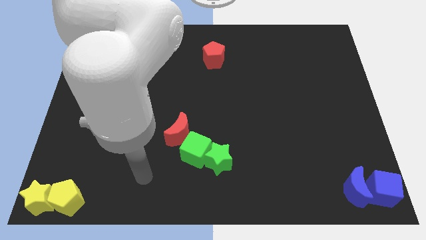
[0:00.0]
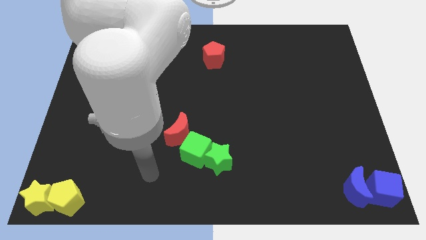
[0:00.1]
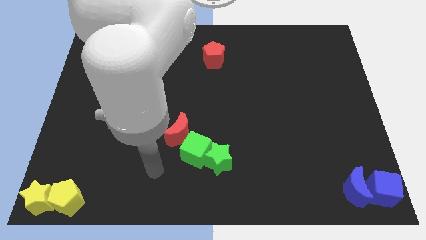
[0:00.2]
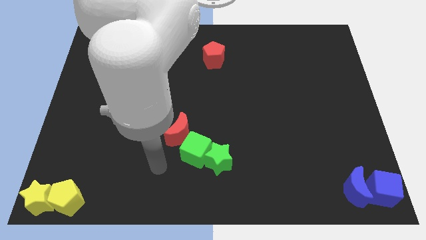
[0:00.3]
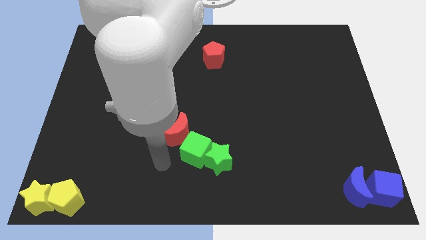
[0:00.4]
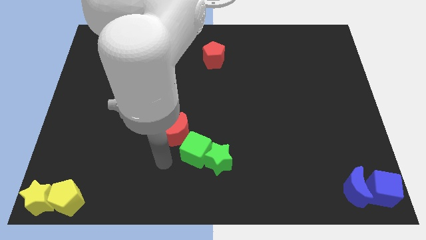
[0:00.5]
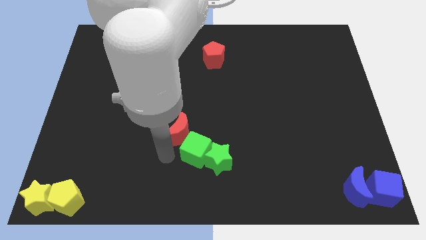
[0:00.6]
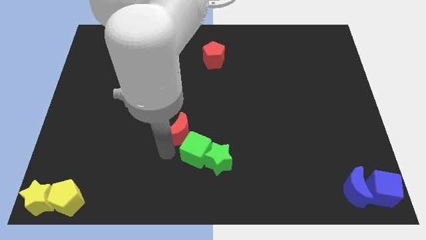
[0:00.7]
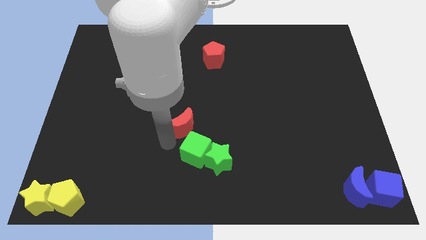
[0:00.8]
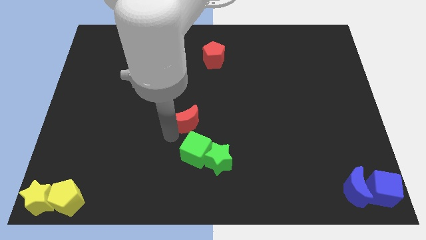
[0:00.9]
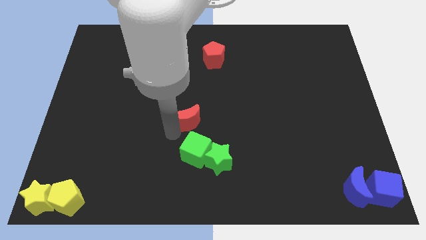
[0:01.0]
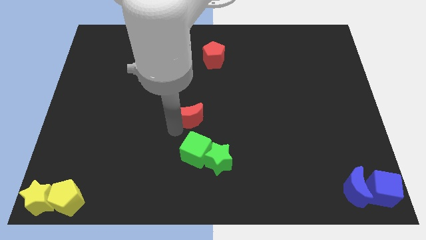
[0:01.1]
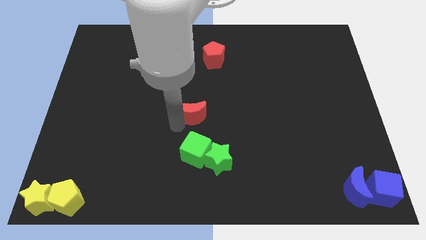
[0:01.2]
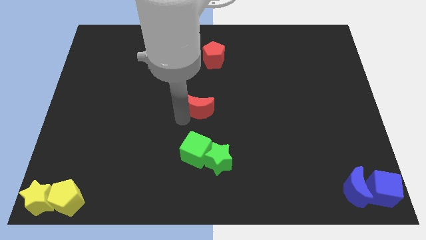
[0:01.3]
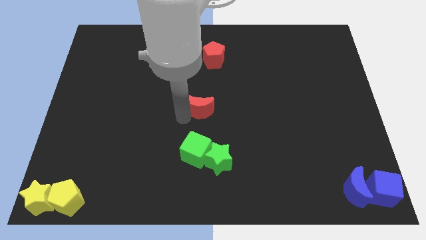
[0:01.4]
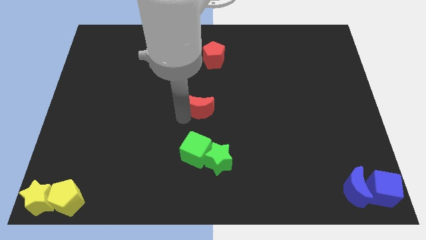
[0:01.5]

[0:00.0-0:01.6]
place the red moon above the green cube

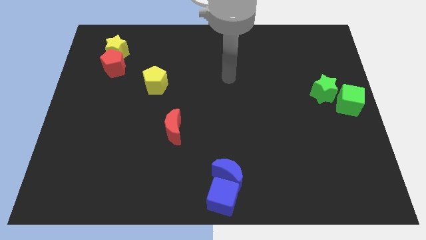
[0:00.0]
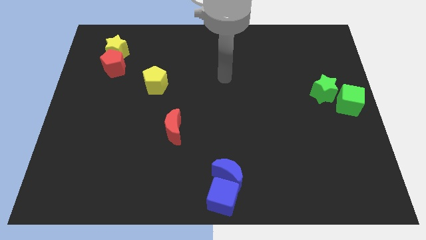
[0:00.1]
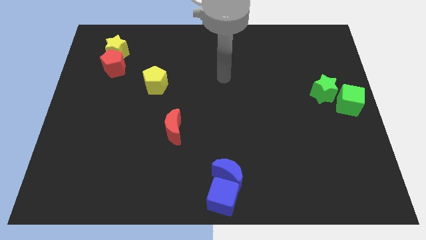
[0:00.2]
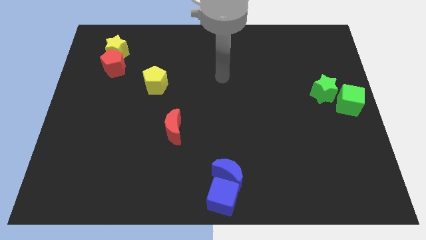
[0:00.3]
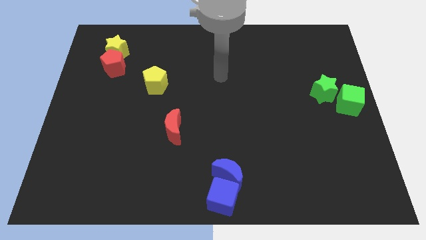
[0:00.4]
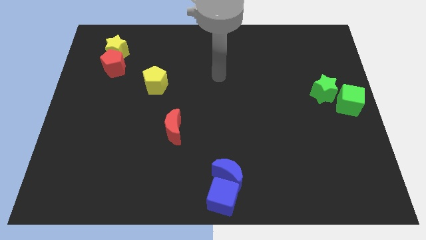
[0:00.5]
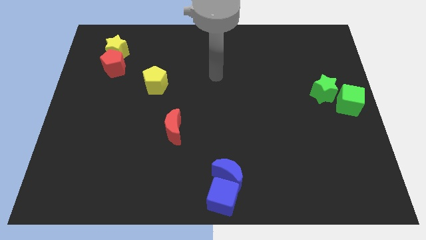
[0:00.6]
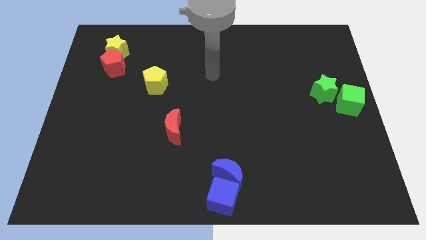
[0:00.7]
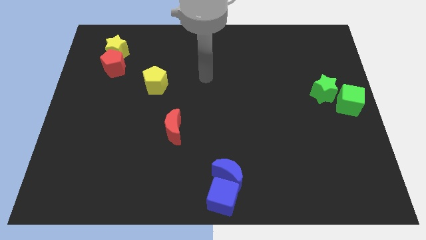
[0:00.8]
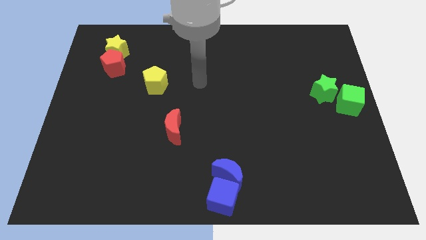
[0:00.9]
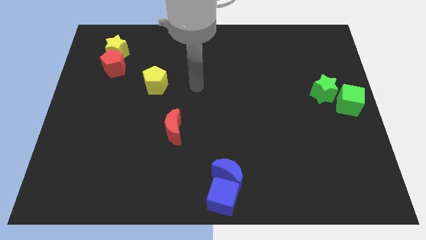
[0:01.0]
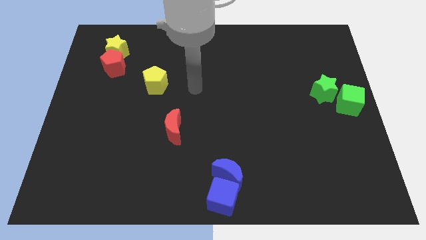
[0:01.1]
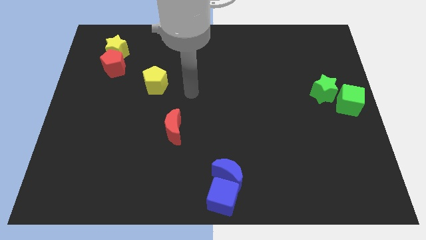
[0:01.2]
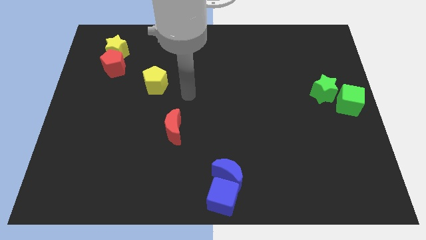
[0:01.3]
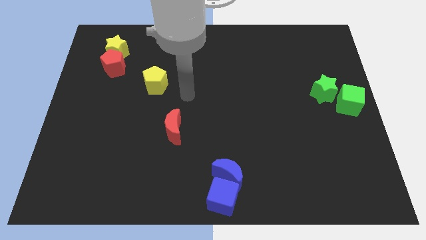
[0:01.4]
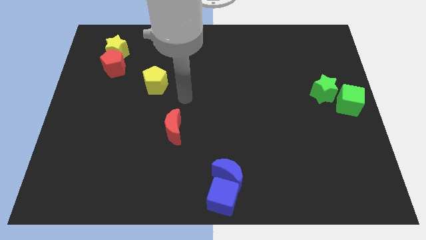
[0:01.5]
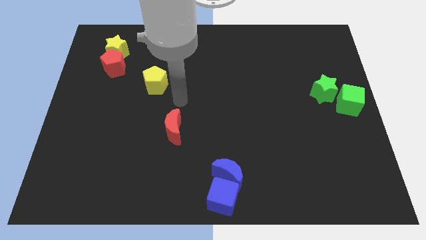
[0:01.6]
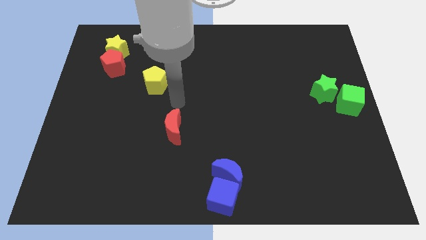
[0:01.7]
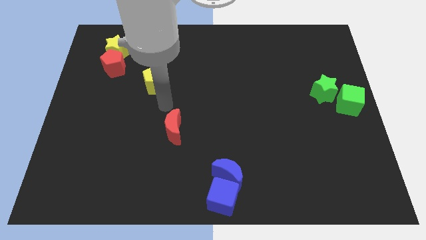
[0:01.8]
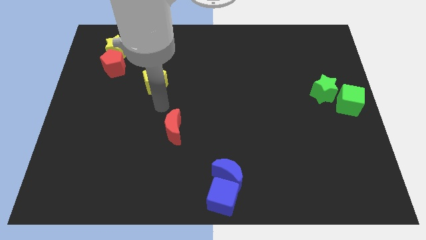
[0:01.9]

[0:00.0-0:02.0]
move your arm to the bottom of yellow pentagon

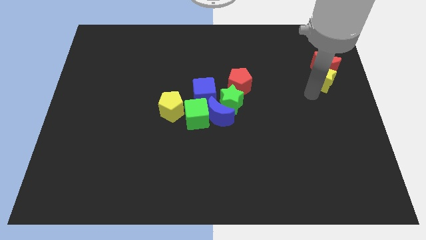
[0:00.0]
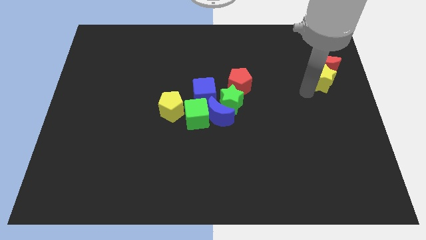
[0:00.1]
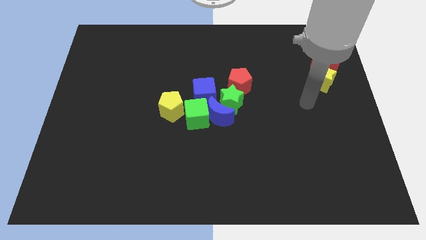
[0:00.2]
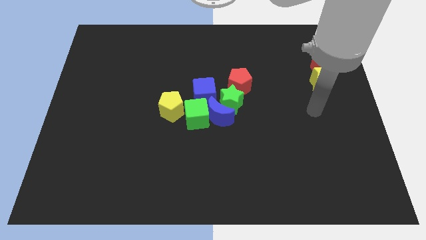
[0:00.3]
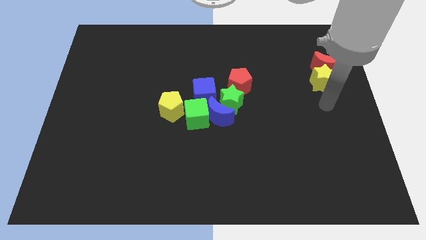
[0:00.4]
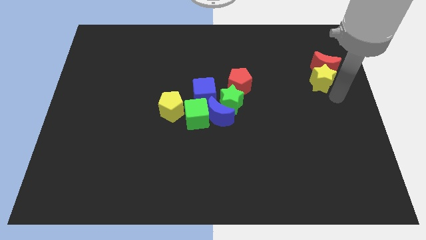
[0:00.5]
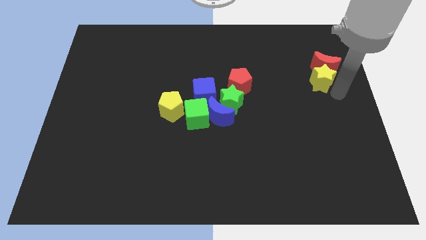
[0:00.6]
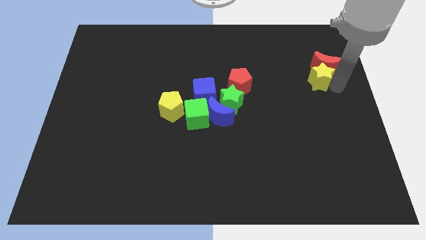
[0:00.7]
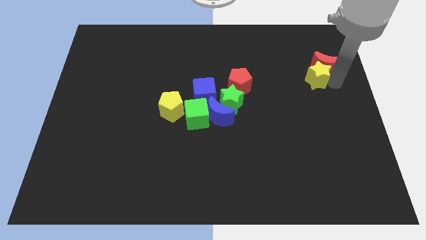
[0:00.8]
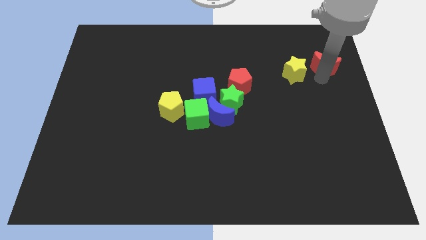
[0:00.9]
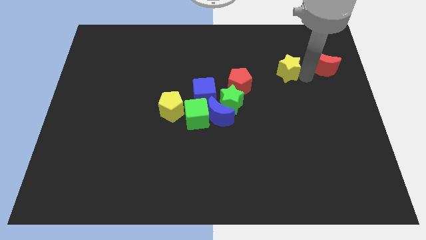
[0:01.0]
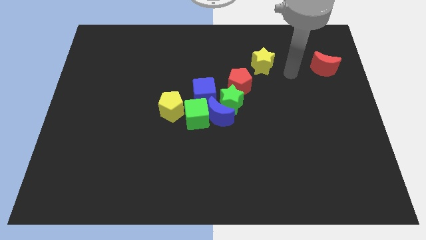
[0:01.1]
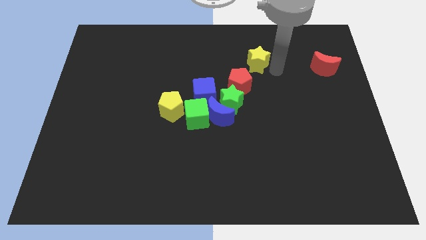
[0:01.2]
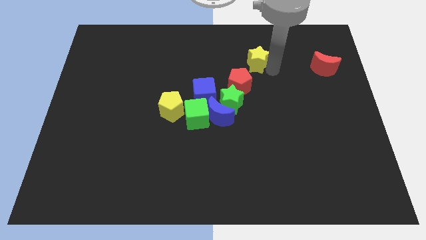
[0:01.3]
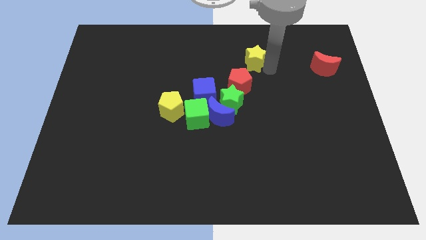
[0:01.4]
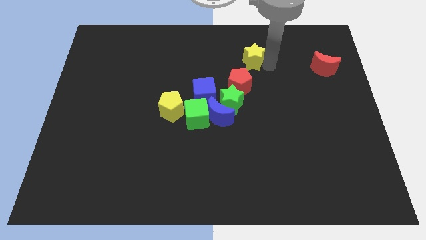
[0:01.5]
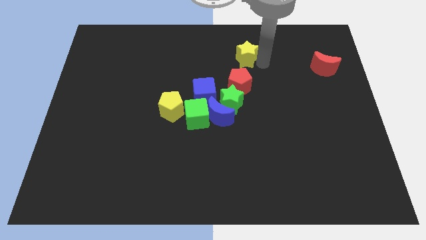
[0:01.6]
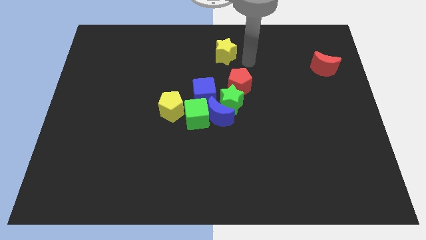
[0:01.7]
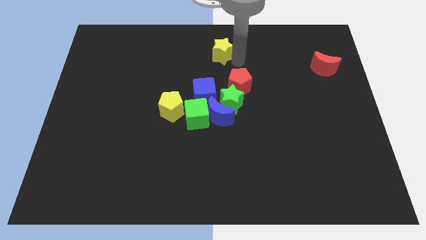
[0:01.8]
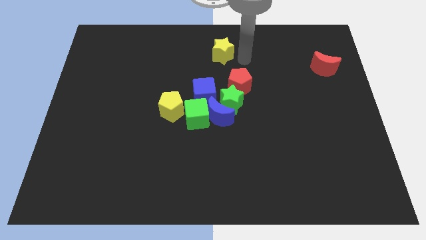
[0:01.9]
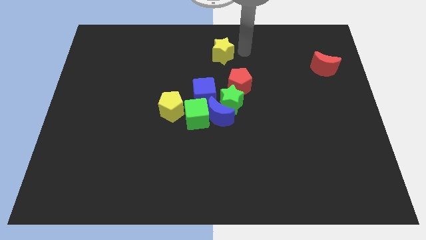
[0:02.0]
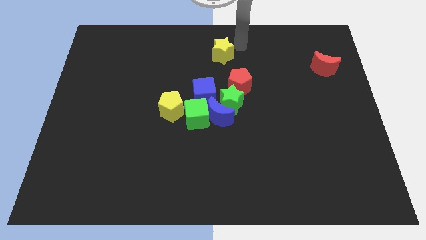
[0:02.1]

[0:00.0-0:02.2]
place the yellow star vertical above green star

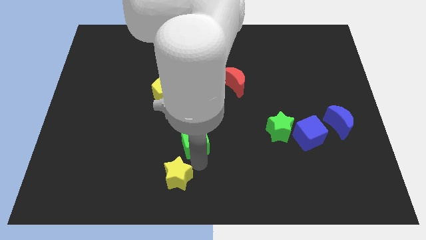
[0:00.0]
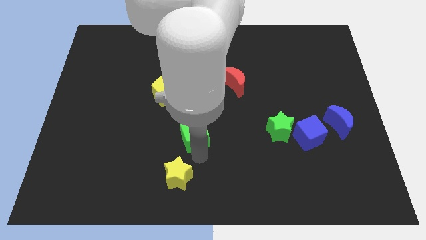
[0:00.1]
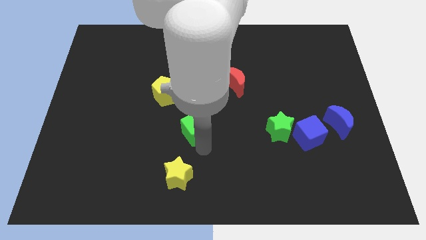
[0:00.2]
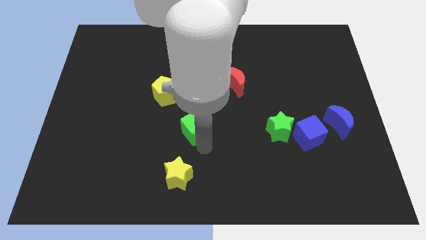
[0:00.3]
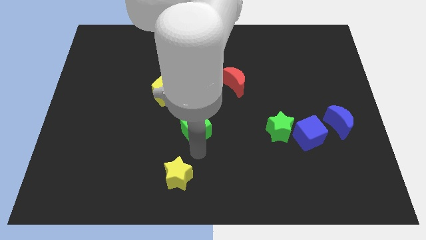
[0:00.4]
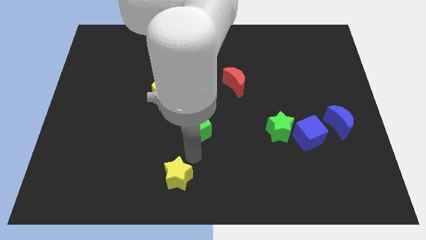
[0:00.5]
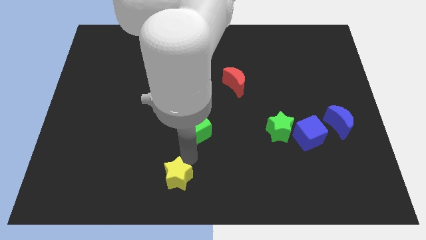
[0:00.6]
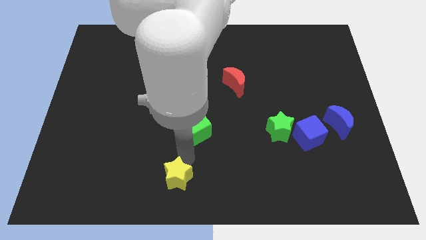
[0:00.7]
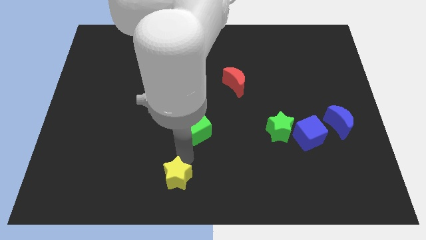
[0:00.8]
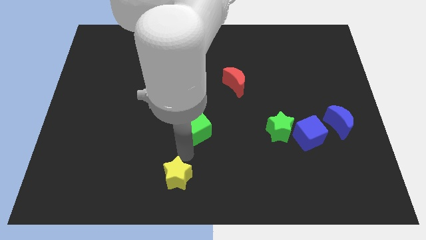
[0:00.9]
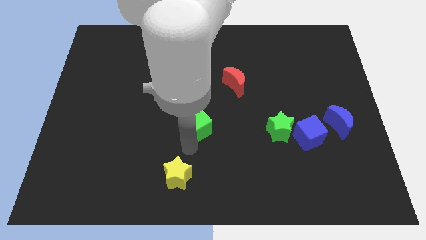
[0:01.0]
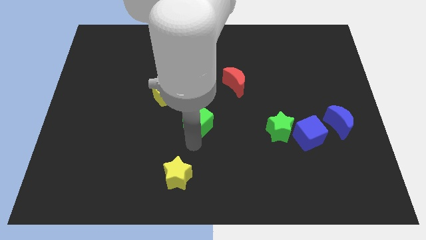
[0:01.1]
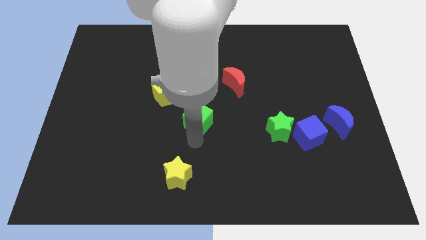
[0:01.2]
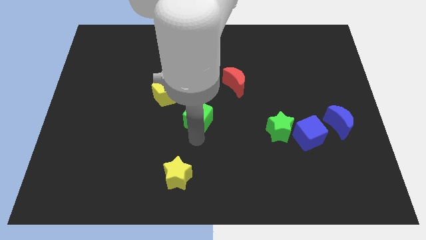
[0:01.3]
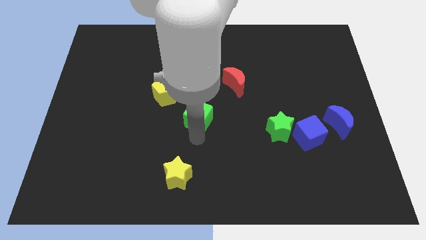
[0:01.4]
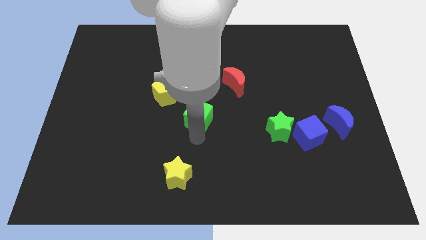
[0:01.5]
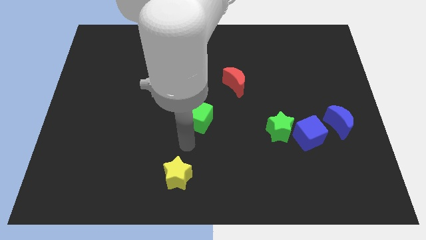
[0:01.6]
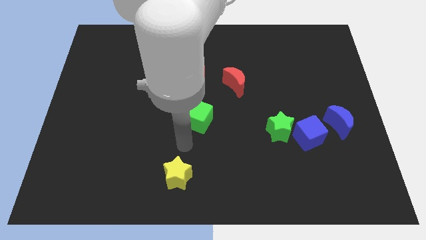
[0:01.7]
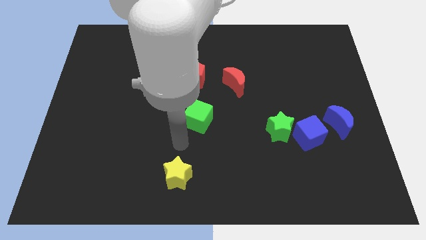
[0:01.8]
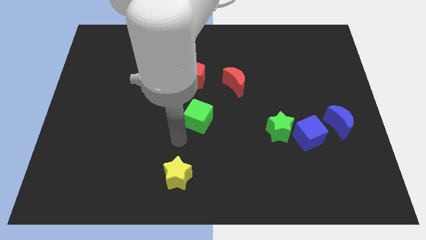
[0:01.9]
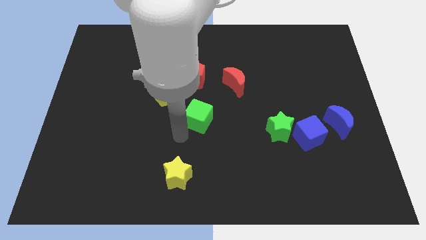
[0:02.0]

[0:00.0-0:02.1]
move the green cube to the center of the board

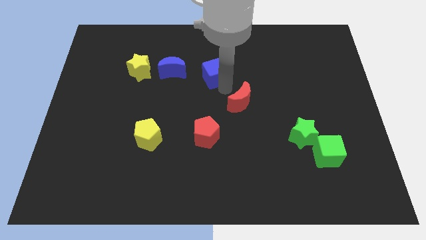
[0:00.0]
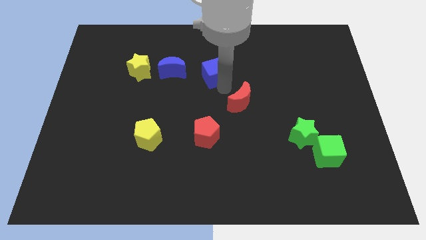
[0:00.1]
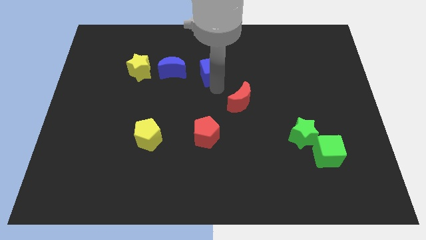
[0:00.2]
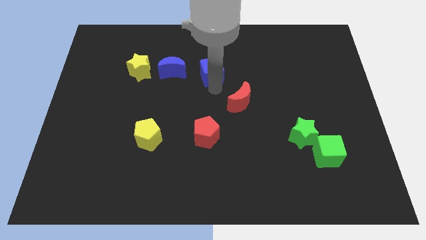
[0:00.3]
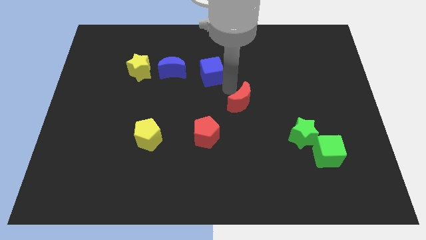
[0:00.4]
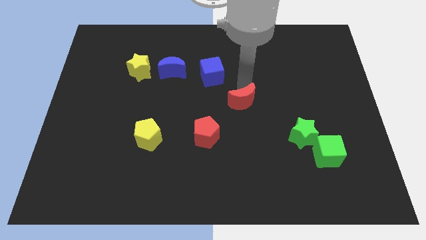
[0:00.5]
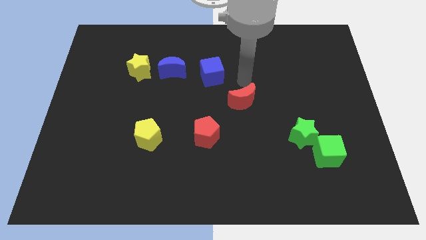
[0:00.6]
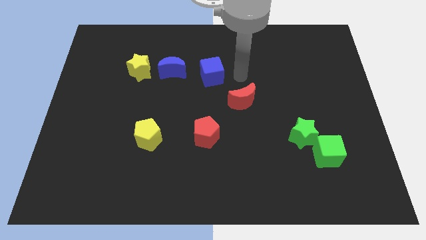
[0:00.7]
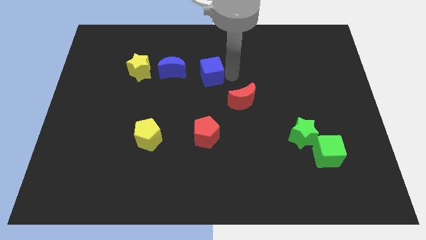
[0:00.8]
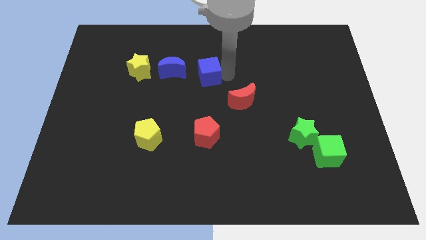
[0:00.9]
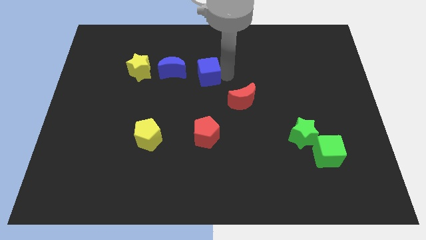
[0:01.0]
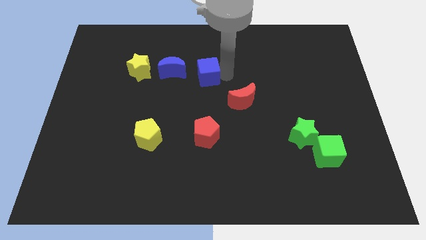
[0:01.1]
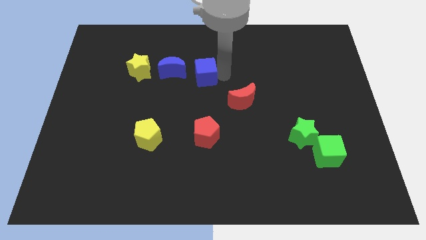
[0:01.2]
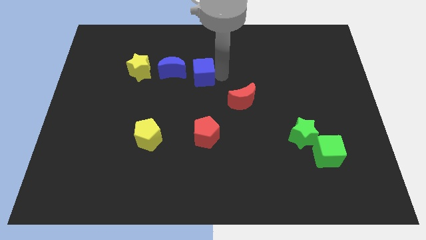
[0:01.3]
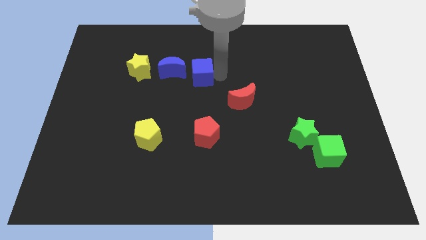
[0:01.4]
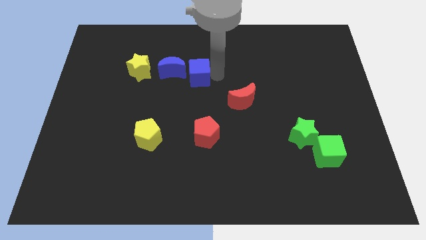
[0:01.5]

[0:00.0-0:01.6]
push the blue cube to the right of the blue crescent
